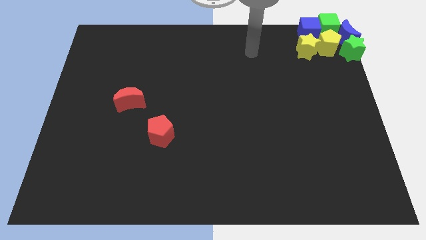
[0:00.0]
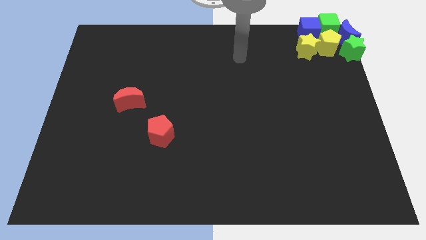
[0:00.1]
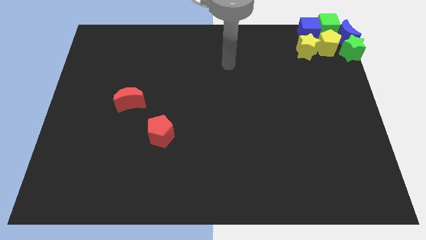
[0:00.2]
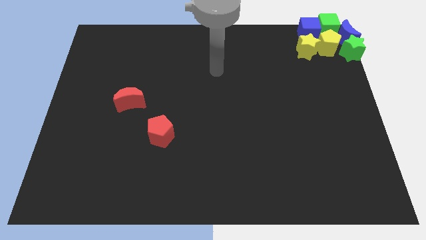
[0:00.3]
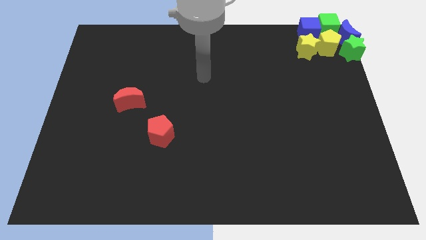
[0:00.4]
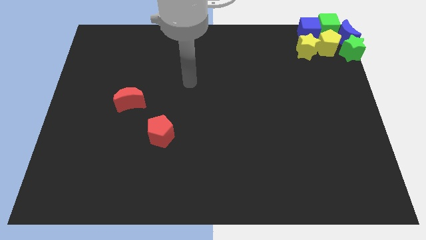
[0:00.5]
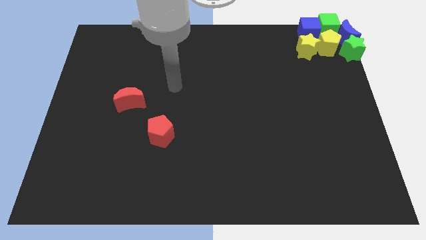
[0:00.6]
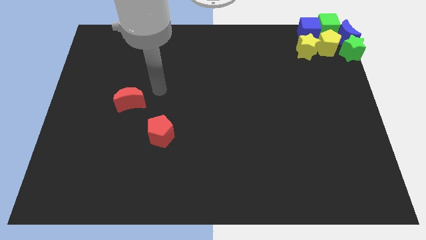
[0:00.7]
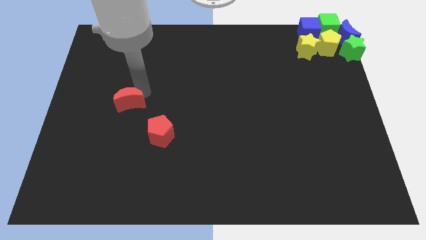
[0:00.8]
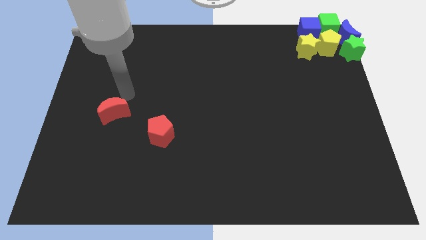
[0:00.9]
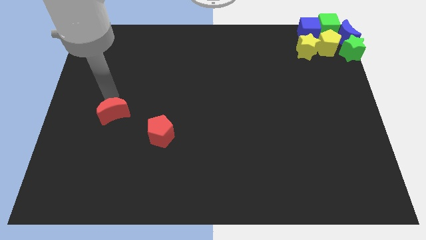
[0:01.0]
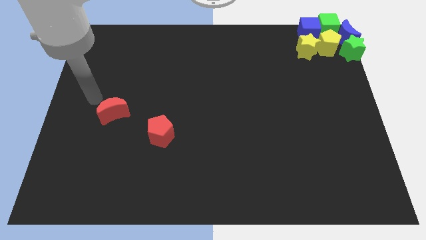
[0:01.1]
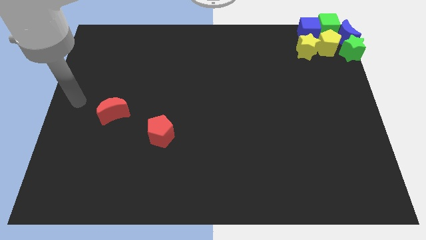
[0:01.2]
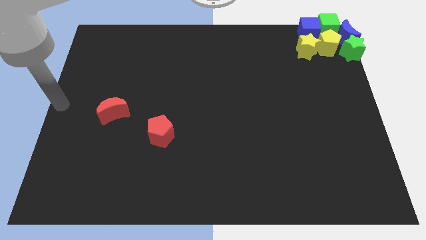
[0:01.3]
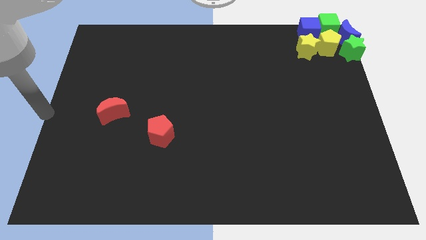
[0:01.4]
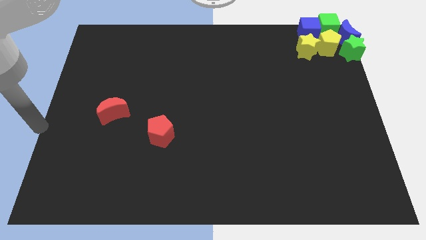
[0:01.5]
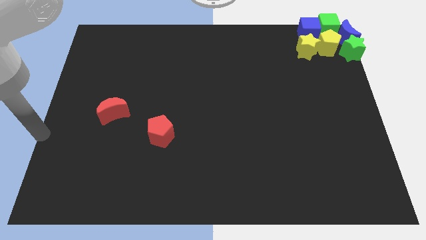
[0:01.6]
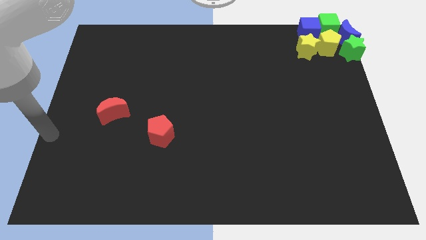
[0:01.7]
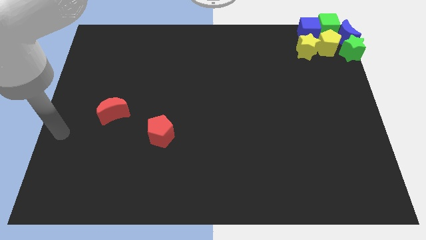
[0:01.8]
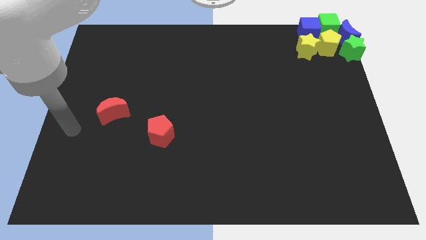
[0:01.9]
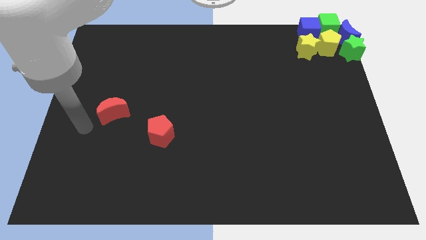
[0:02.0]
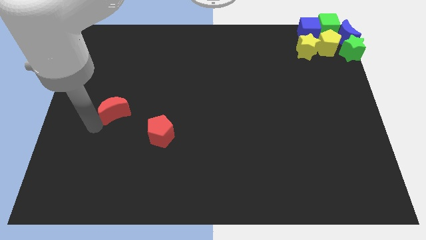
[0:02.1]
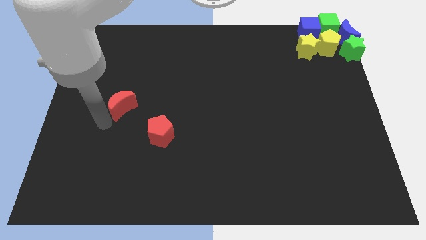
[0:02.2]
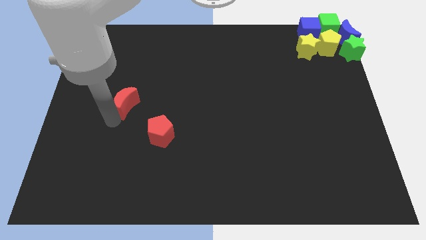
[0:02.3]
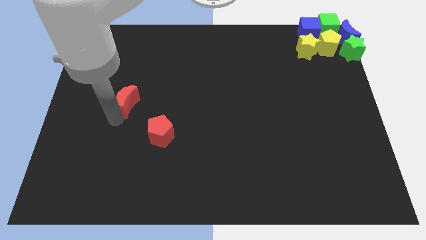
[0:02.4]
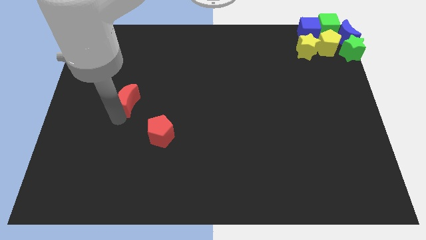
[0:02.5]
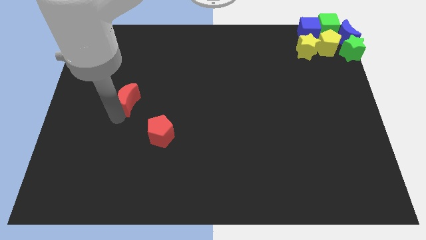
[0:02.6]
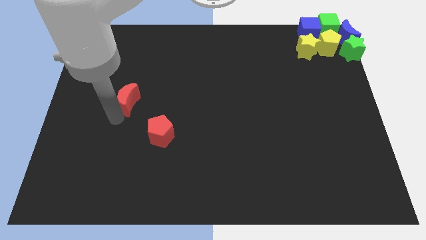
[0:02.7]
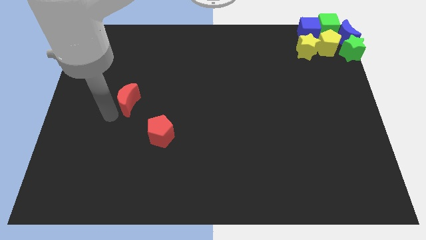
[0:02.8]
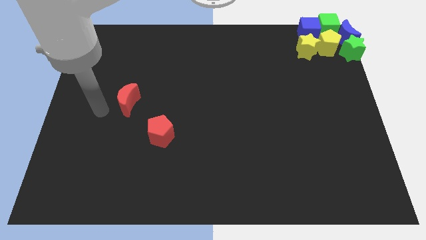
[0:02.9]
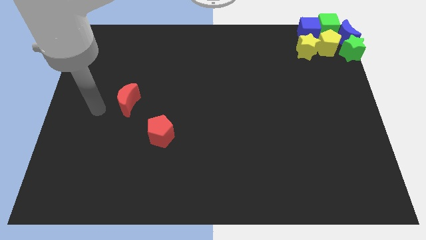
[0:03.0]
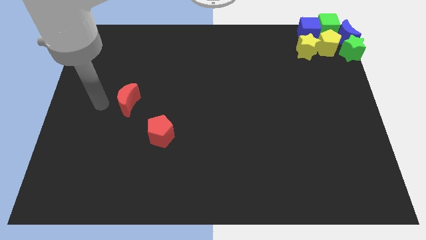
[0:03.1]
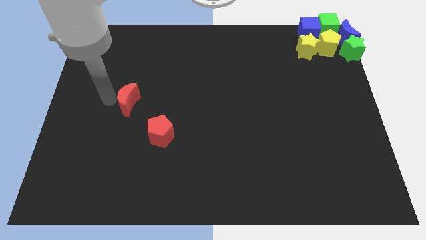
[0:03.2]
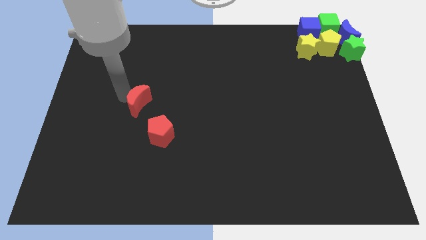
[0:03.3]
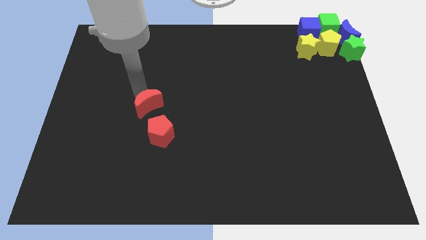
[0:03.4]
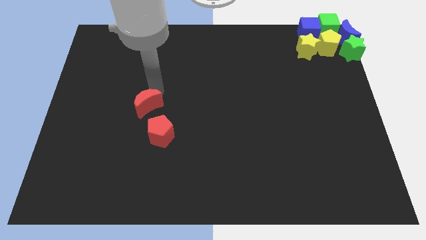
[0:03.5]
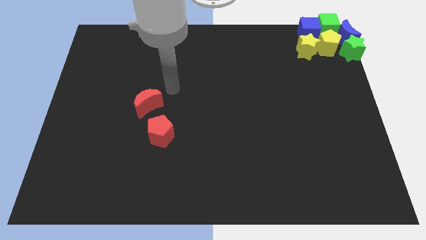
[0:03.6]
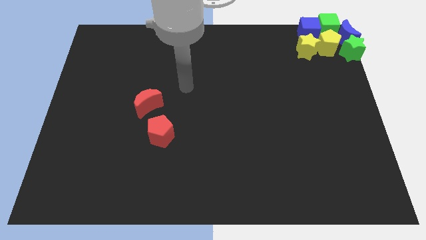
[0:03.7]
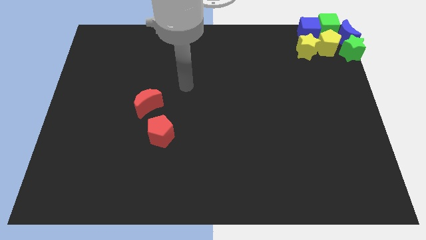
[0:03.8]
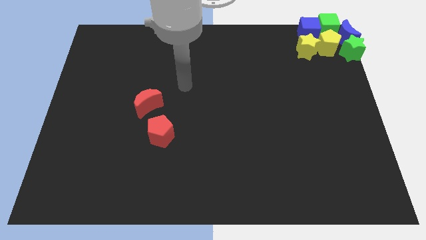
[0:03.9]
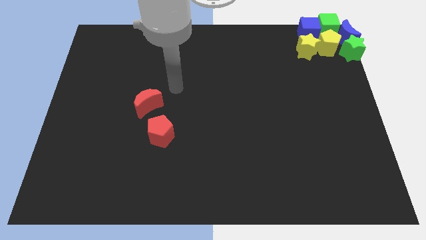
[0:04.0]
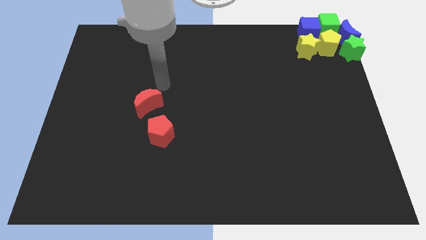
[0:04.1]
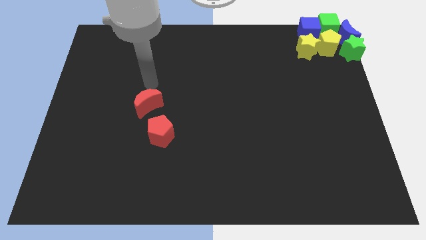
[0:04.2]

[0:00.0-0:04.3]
put the red crescent diagonally on the top left side of the red pentagon

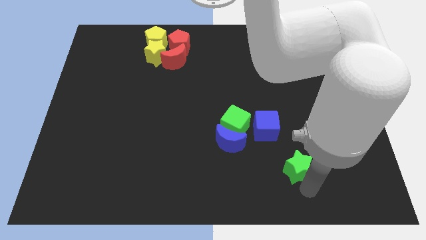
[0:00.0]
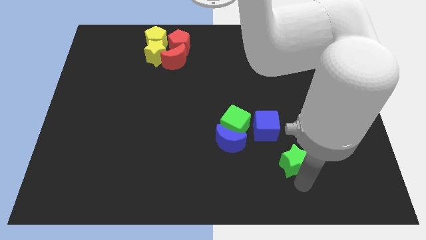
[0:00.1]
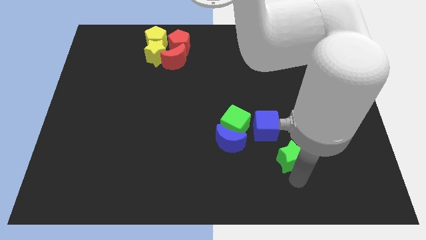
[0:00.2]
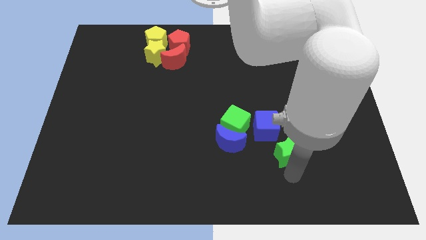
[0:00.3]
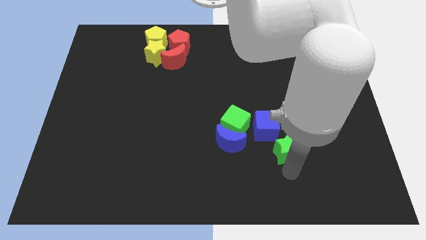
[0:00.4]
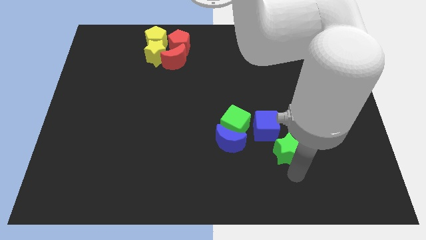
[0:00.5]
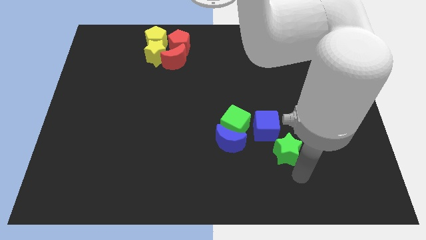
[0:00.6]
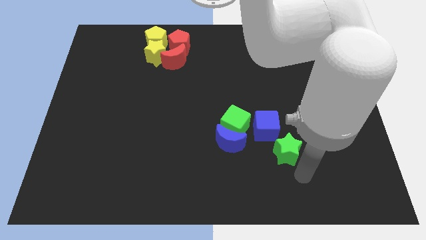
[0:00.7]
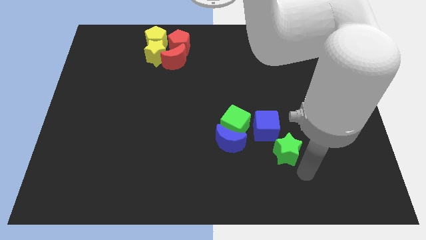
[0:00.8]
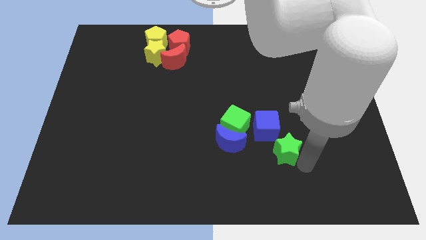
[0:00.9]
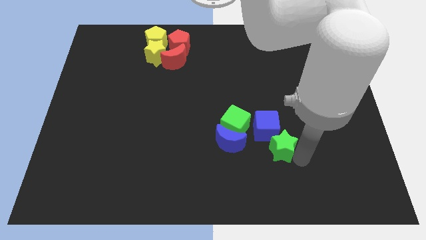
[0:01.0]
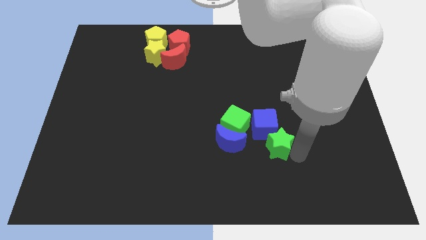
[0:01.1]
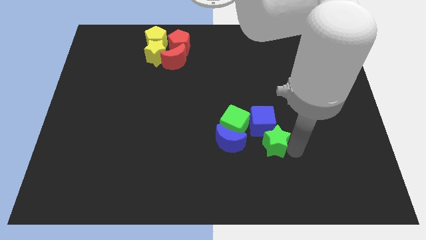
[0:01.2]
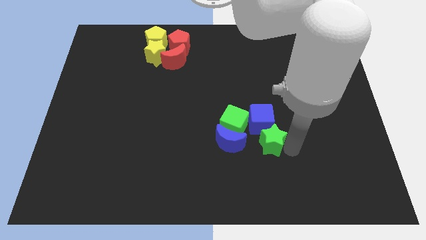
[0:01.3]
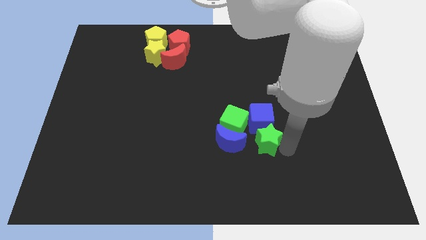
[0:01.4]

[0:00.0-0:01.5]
slide green star into the blue cube

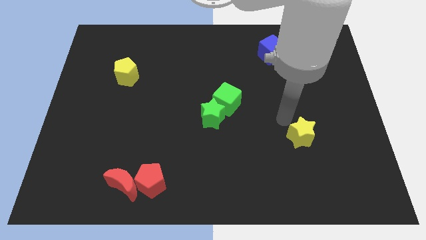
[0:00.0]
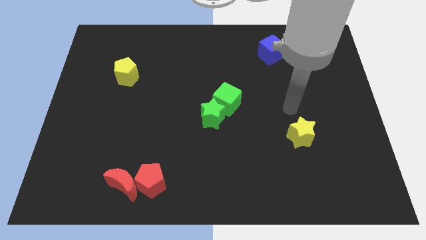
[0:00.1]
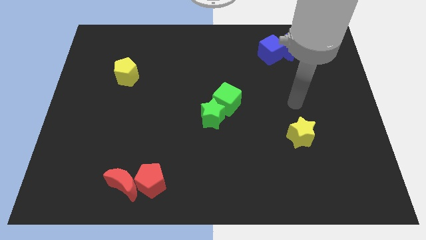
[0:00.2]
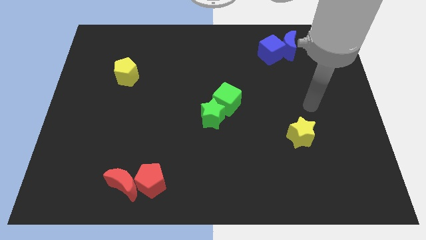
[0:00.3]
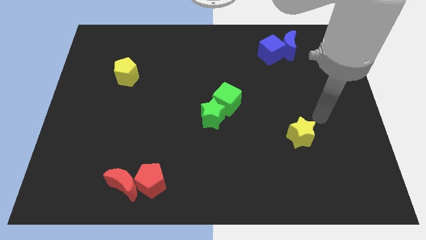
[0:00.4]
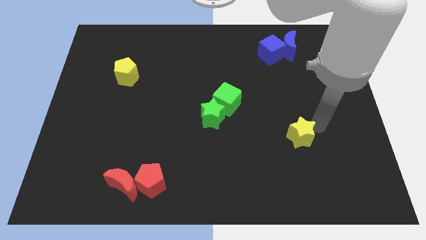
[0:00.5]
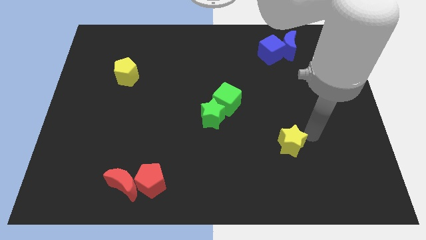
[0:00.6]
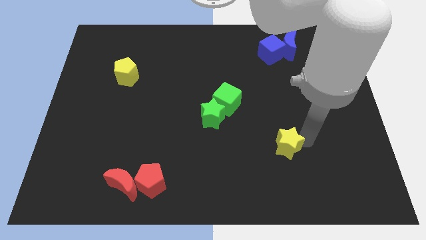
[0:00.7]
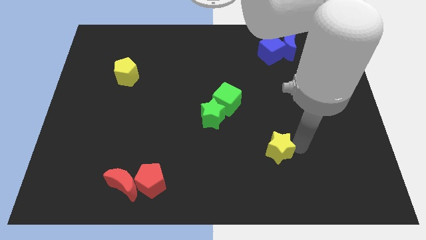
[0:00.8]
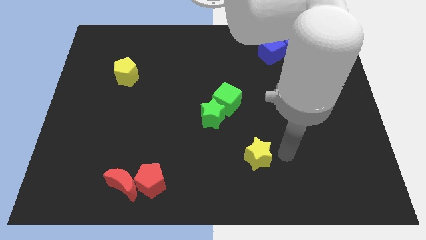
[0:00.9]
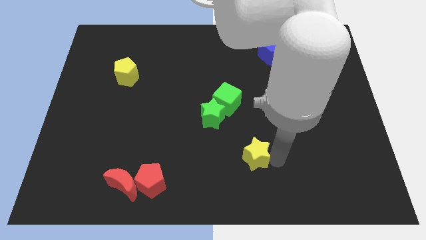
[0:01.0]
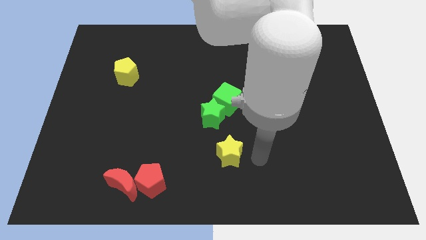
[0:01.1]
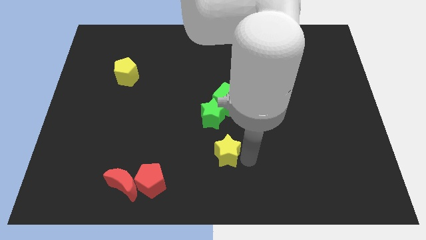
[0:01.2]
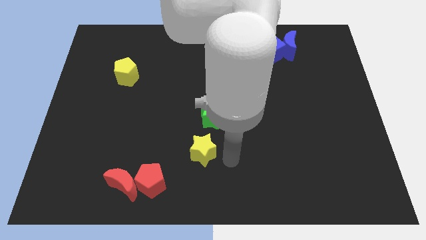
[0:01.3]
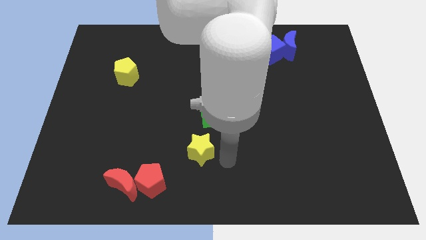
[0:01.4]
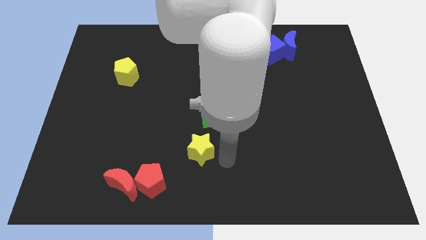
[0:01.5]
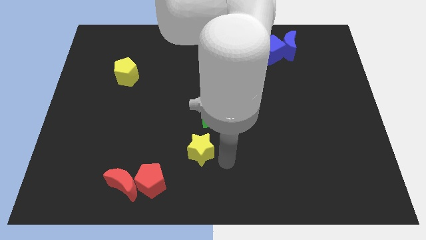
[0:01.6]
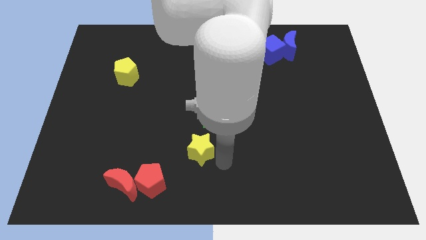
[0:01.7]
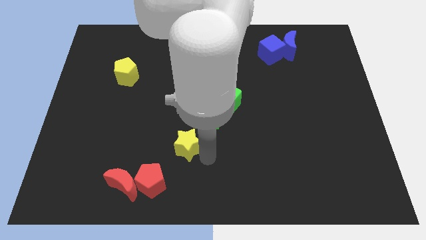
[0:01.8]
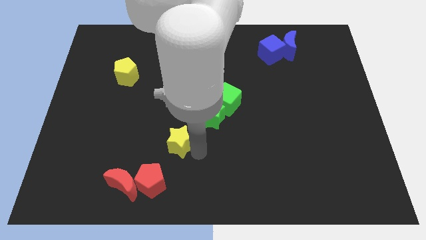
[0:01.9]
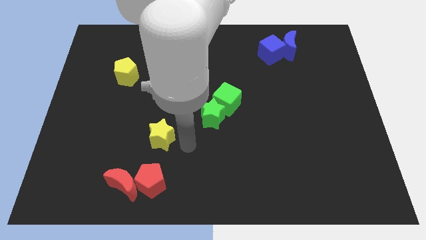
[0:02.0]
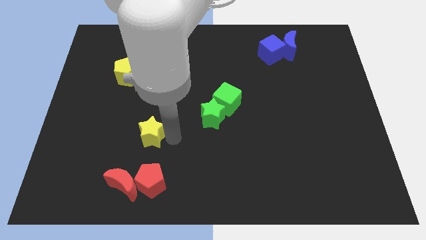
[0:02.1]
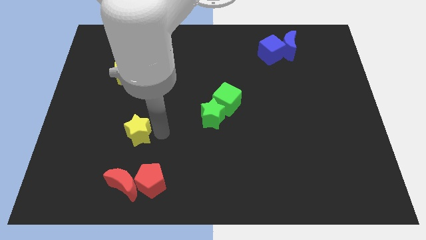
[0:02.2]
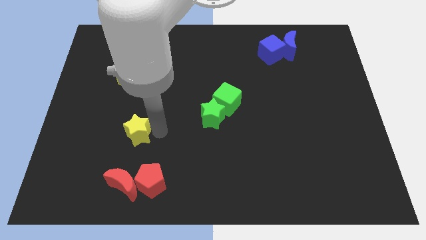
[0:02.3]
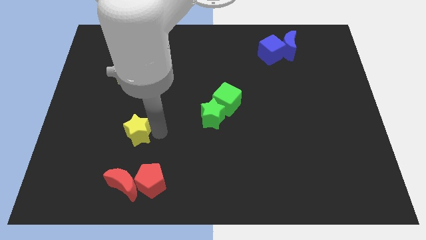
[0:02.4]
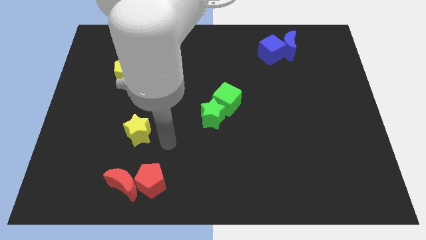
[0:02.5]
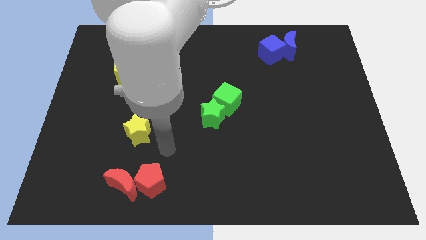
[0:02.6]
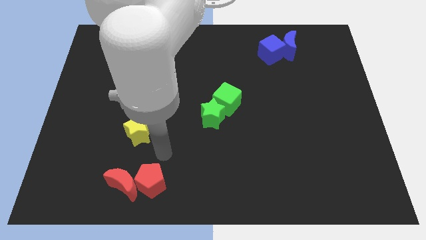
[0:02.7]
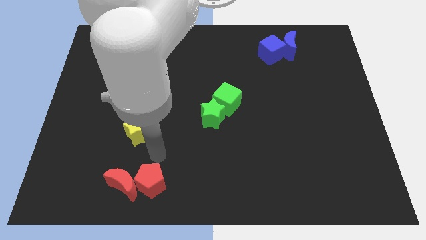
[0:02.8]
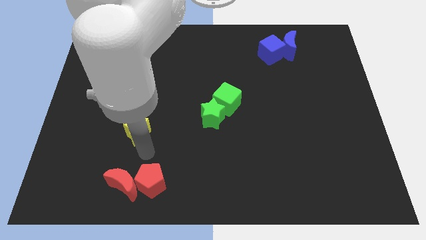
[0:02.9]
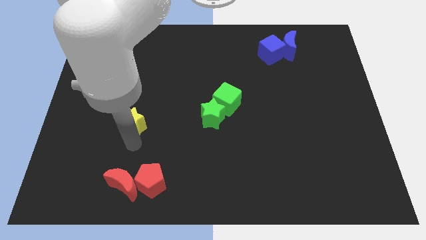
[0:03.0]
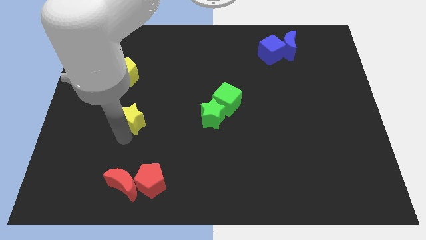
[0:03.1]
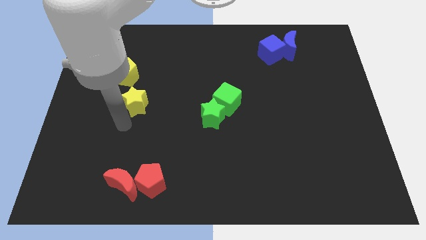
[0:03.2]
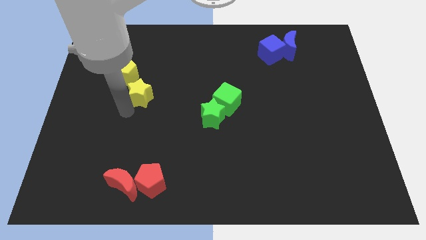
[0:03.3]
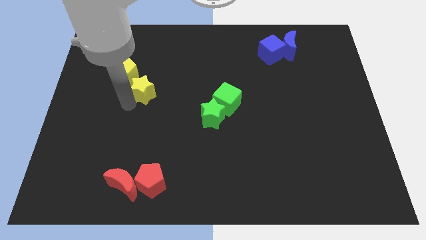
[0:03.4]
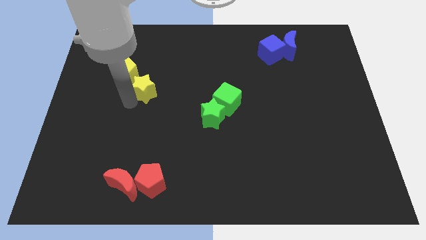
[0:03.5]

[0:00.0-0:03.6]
place the yellow star left to the green cube
